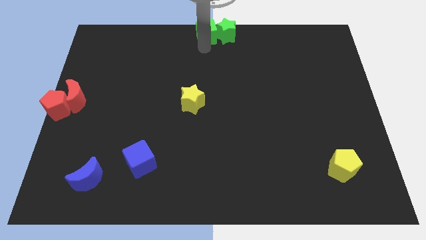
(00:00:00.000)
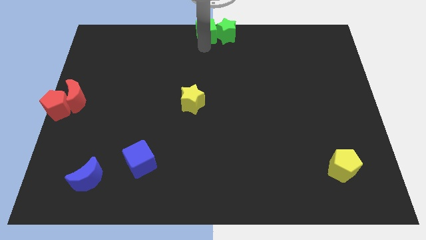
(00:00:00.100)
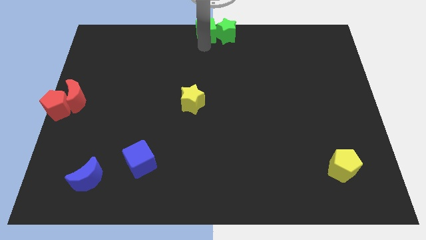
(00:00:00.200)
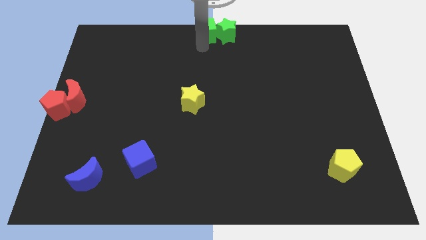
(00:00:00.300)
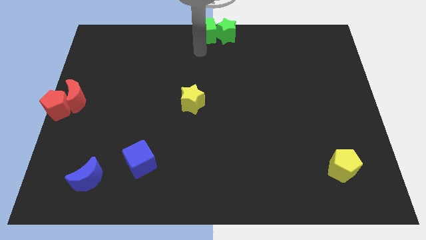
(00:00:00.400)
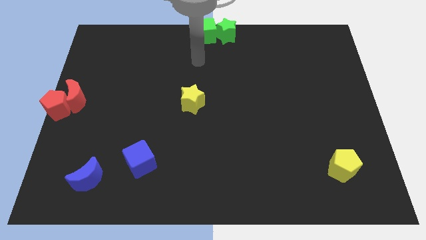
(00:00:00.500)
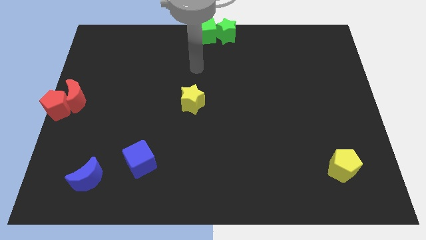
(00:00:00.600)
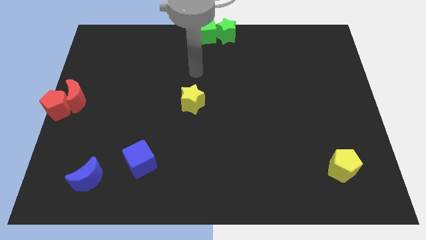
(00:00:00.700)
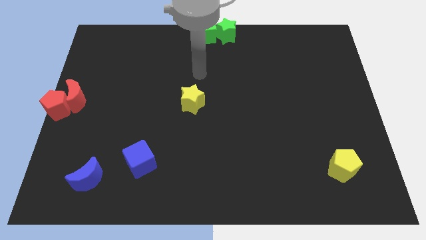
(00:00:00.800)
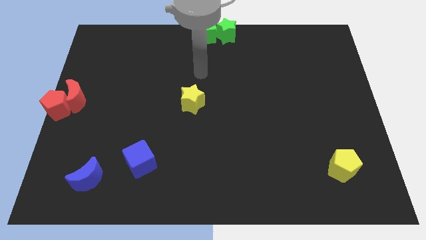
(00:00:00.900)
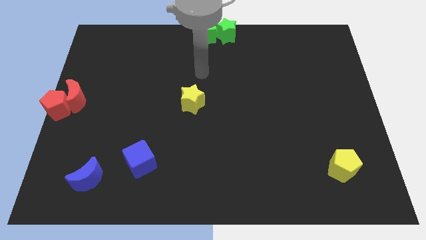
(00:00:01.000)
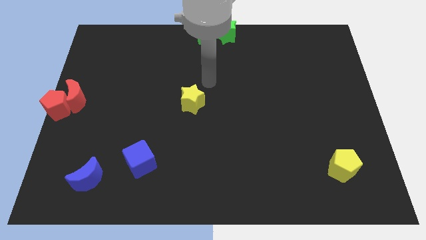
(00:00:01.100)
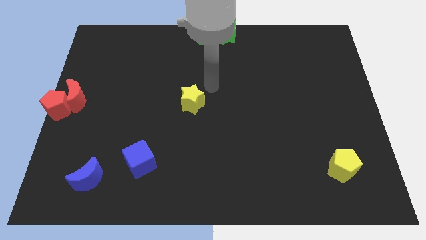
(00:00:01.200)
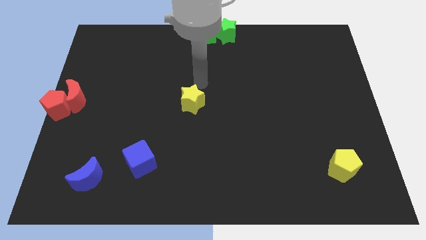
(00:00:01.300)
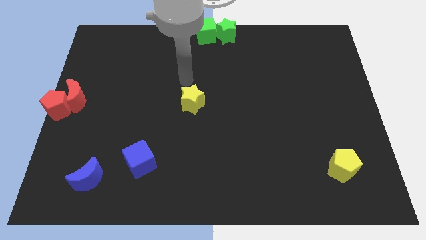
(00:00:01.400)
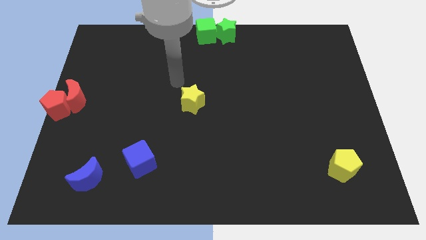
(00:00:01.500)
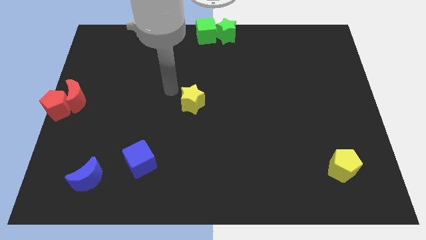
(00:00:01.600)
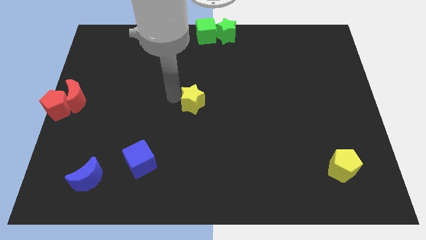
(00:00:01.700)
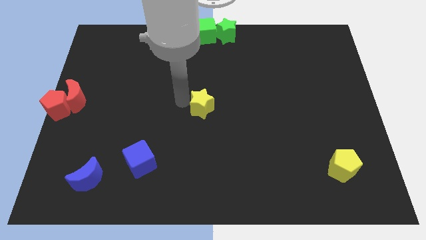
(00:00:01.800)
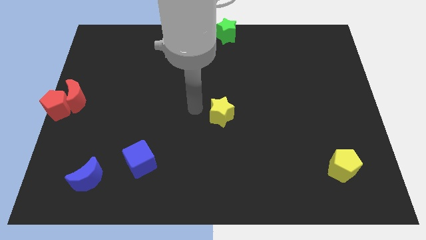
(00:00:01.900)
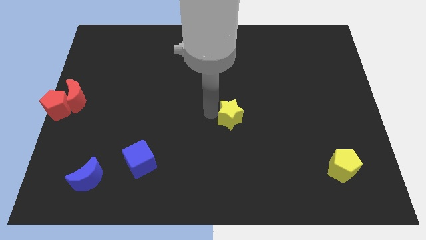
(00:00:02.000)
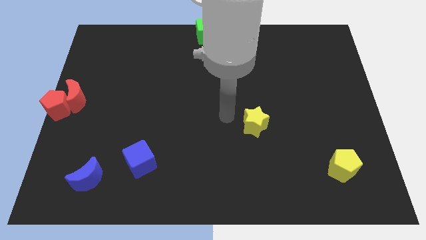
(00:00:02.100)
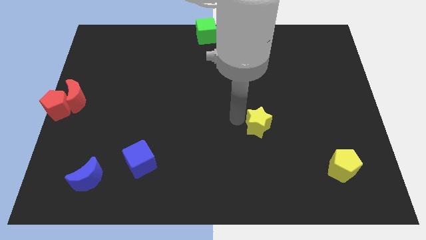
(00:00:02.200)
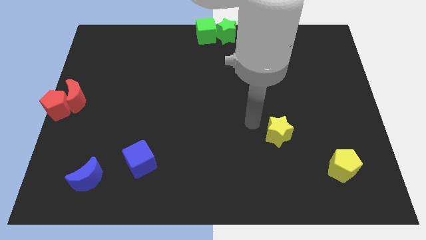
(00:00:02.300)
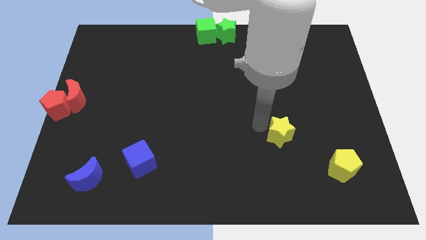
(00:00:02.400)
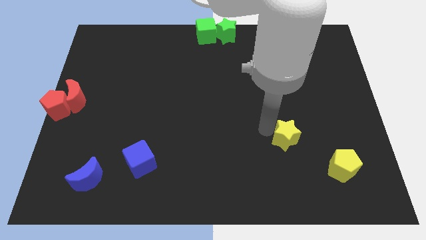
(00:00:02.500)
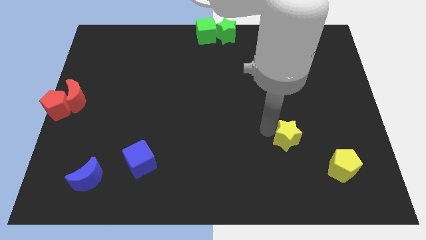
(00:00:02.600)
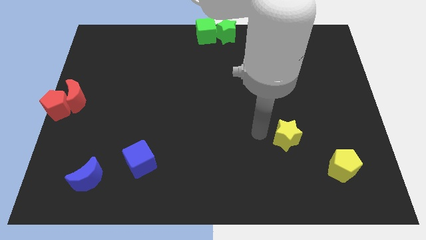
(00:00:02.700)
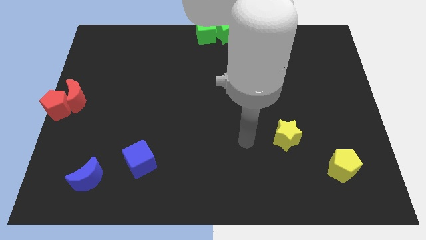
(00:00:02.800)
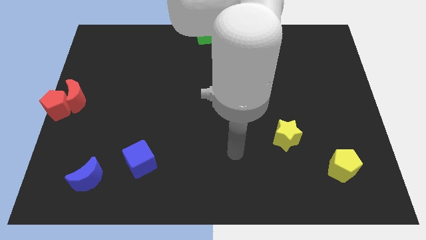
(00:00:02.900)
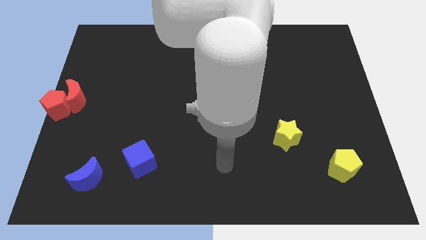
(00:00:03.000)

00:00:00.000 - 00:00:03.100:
place the yellow star diagonally top left to the yellow pentagon

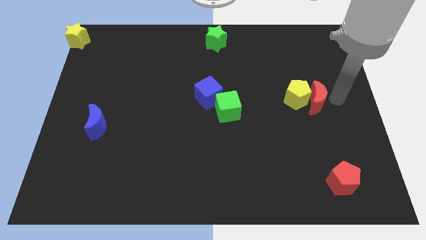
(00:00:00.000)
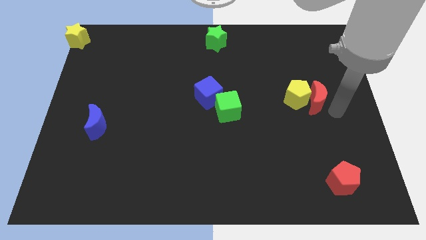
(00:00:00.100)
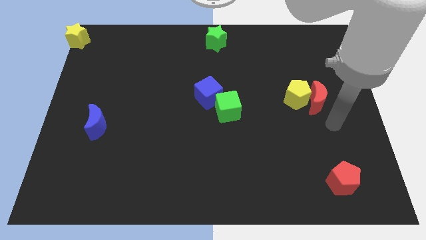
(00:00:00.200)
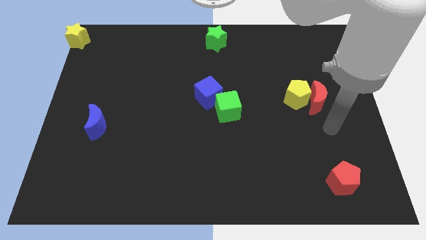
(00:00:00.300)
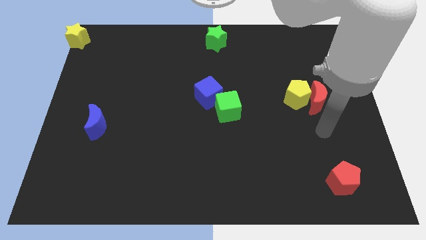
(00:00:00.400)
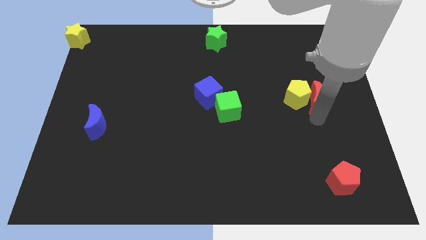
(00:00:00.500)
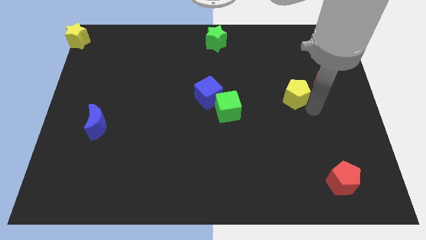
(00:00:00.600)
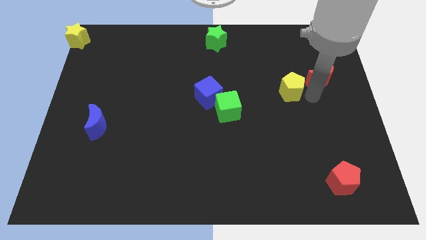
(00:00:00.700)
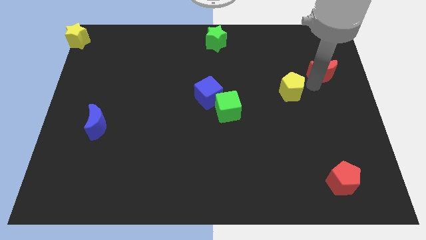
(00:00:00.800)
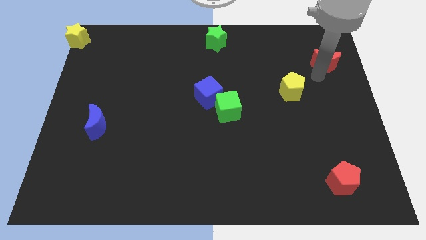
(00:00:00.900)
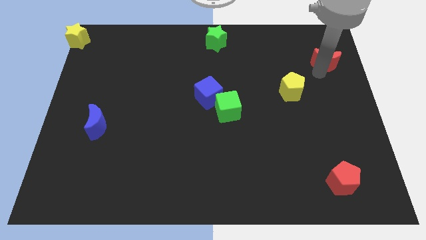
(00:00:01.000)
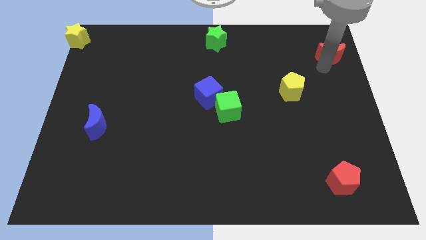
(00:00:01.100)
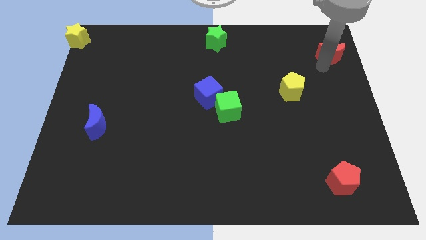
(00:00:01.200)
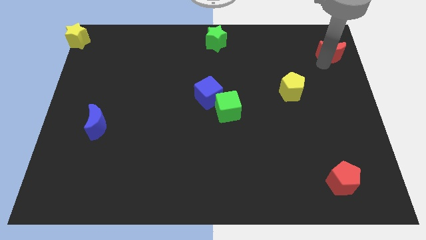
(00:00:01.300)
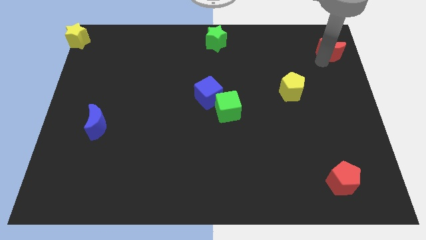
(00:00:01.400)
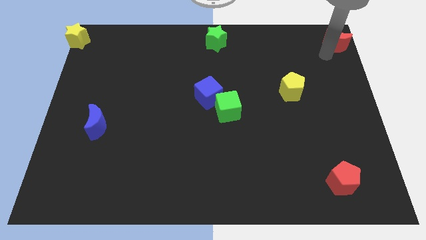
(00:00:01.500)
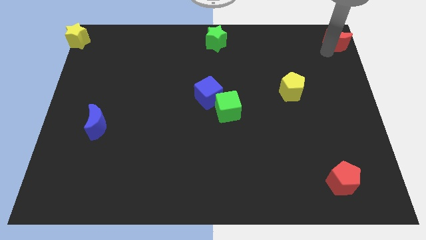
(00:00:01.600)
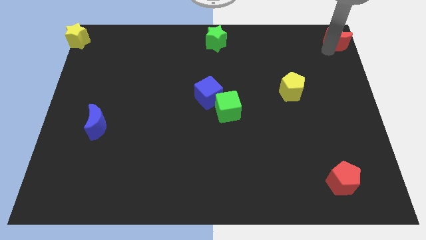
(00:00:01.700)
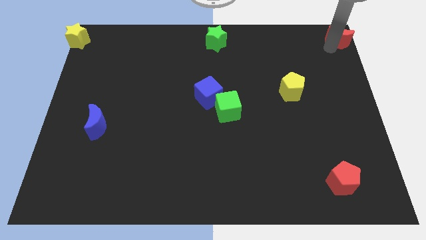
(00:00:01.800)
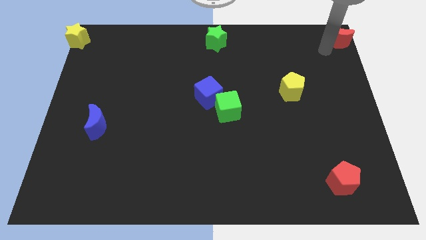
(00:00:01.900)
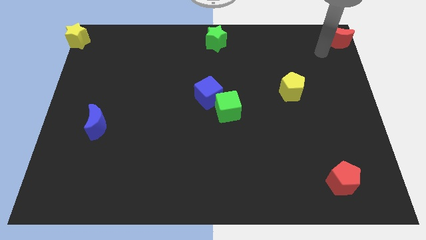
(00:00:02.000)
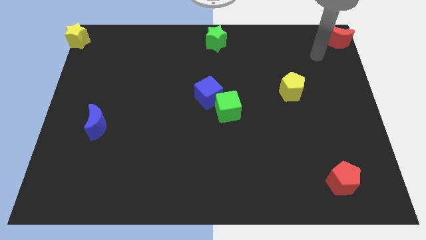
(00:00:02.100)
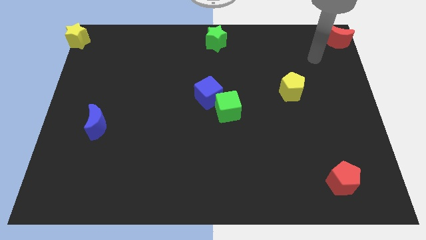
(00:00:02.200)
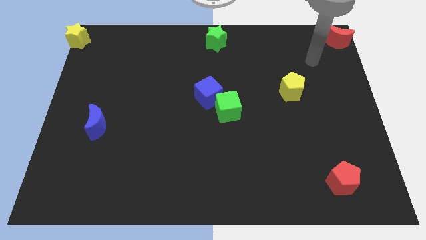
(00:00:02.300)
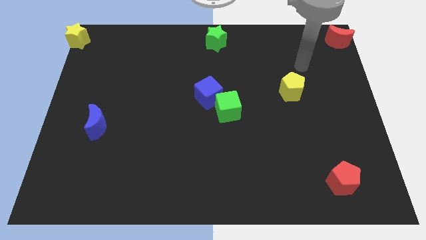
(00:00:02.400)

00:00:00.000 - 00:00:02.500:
move the red crescent to the top right of the board

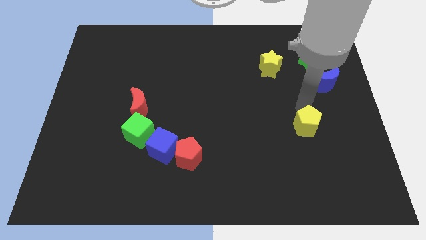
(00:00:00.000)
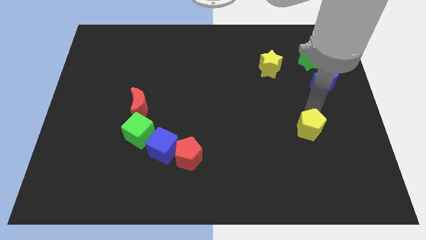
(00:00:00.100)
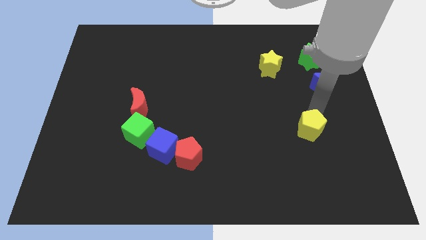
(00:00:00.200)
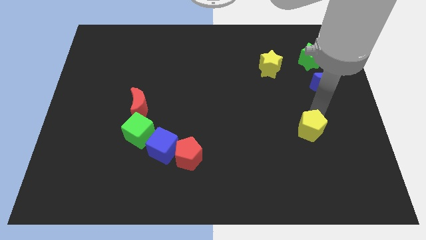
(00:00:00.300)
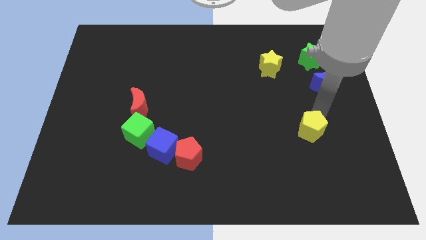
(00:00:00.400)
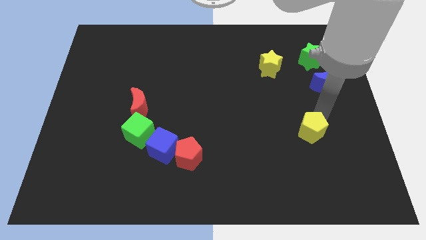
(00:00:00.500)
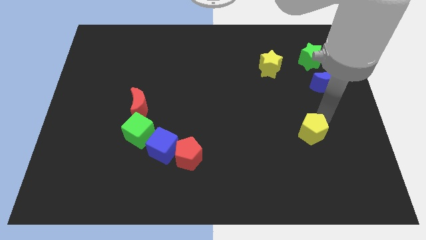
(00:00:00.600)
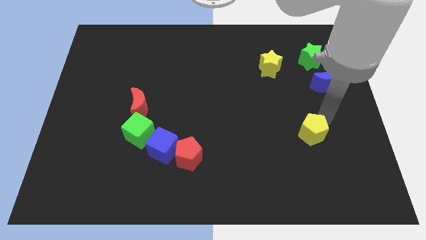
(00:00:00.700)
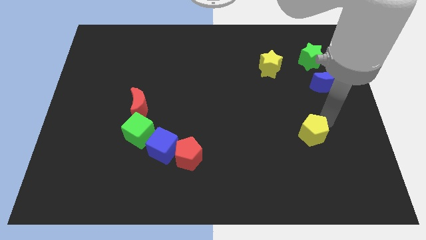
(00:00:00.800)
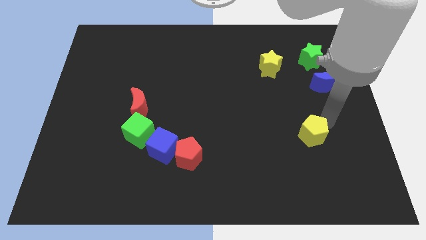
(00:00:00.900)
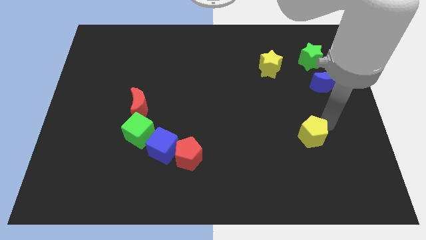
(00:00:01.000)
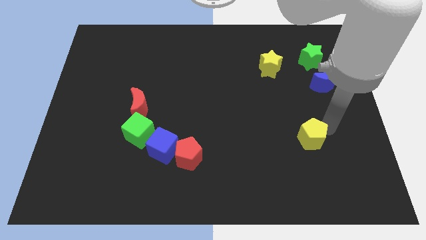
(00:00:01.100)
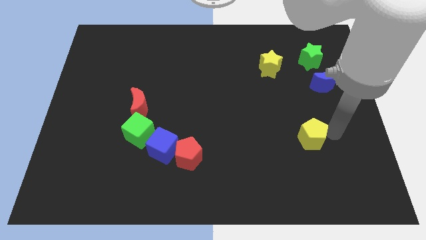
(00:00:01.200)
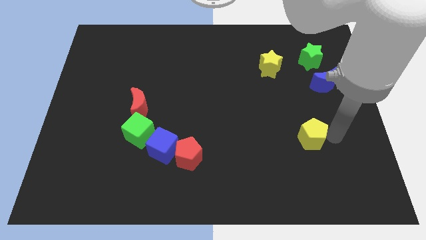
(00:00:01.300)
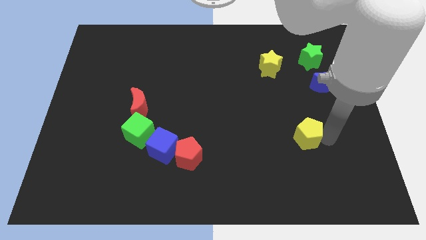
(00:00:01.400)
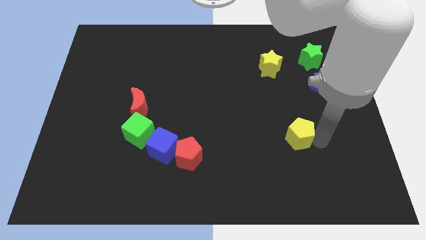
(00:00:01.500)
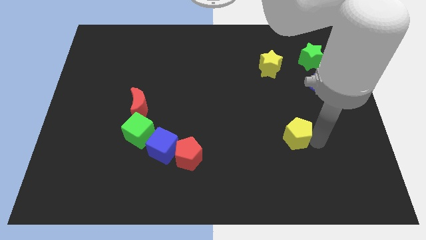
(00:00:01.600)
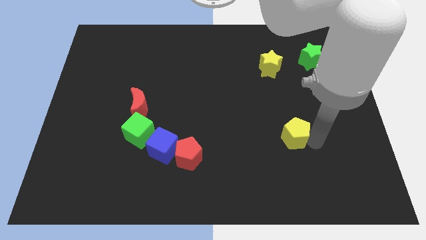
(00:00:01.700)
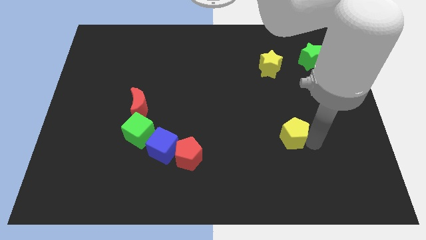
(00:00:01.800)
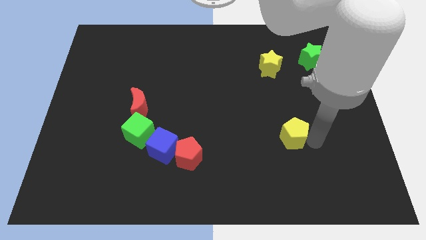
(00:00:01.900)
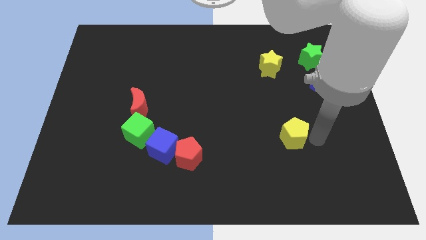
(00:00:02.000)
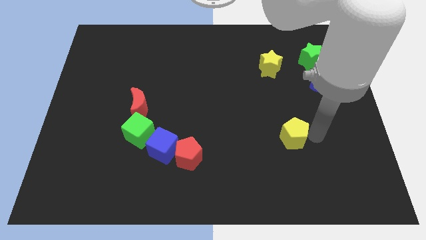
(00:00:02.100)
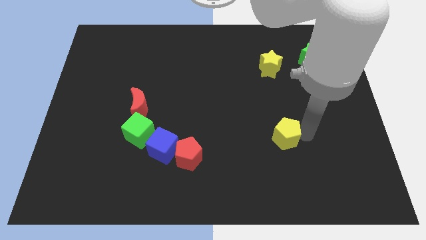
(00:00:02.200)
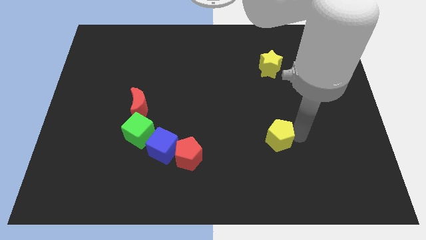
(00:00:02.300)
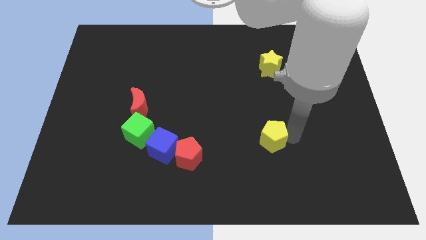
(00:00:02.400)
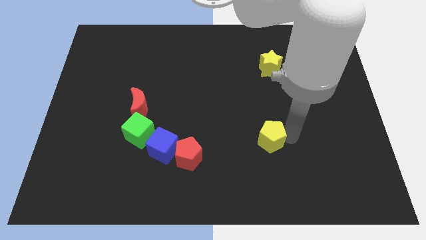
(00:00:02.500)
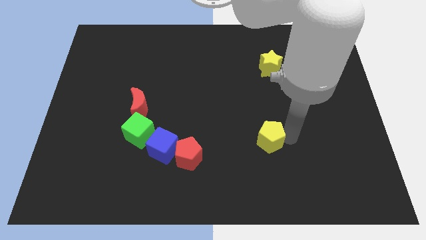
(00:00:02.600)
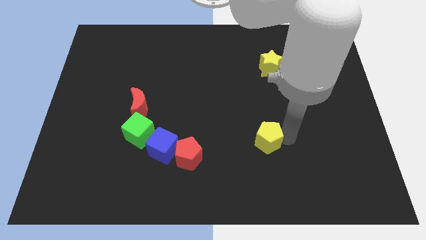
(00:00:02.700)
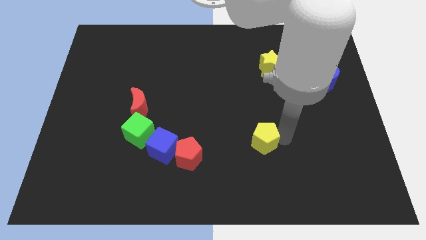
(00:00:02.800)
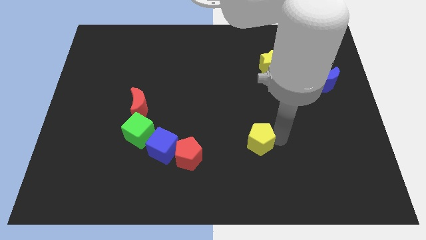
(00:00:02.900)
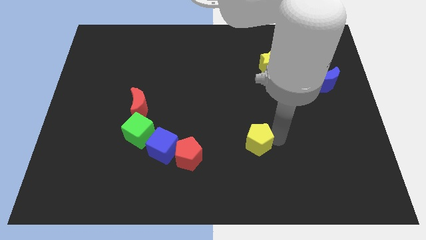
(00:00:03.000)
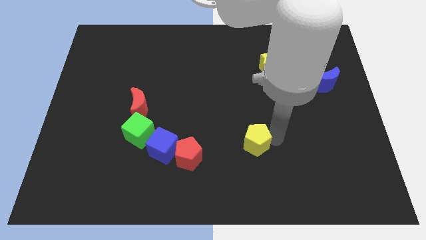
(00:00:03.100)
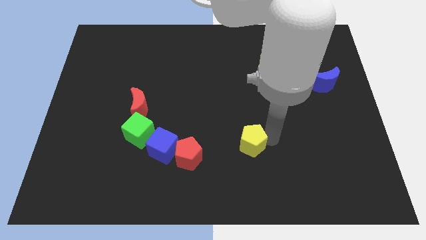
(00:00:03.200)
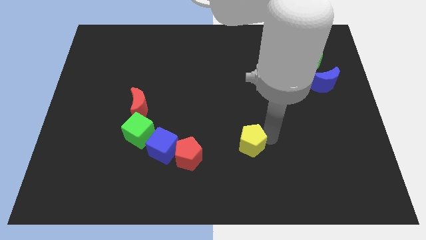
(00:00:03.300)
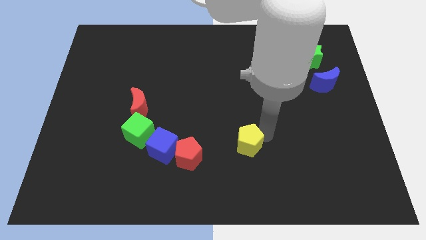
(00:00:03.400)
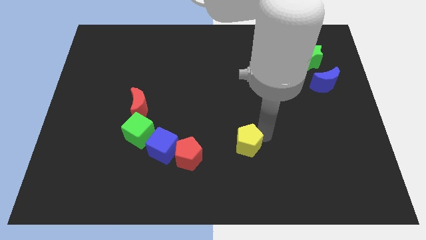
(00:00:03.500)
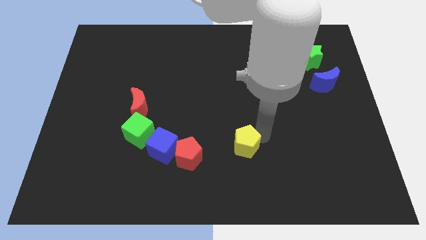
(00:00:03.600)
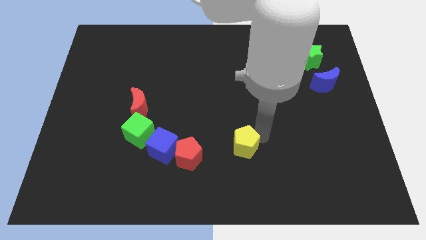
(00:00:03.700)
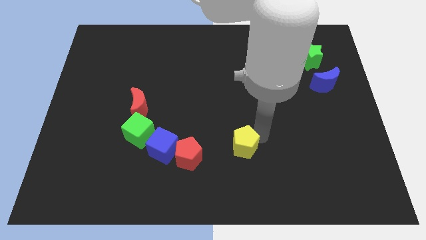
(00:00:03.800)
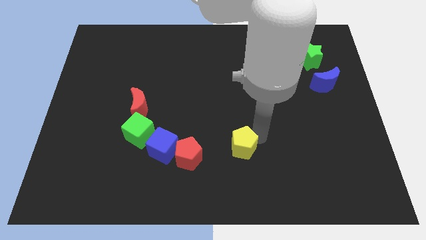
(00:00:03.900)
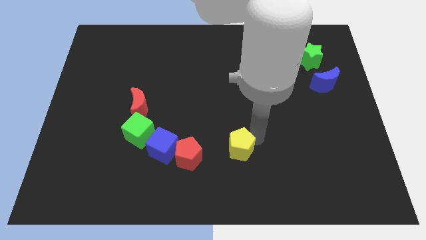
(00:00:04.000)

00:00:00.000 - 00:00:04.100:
move yellow pentagon towards red pentagon
